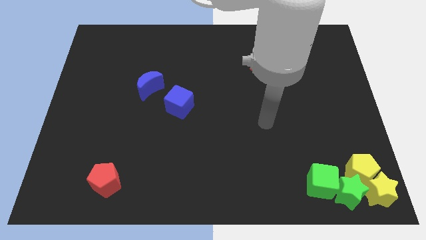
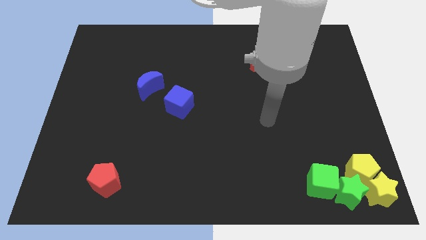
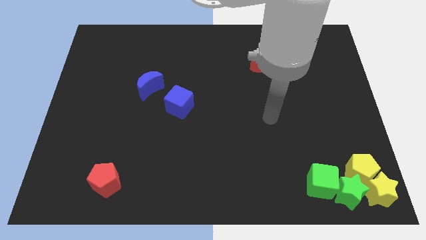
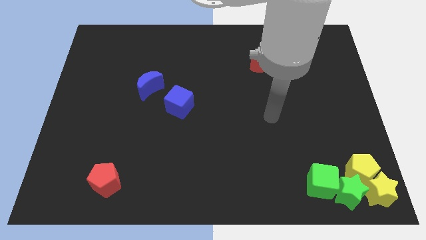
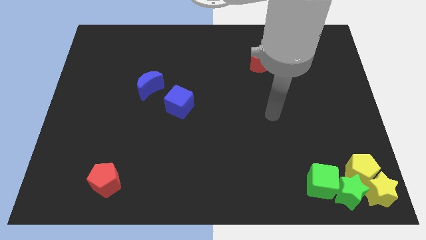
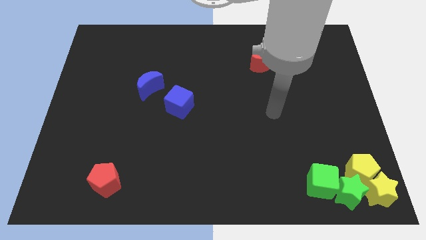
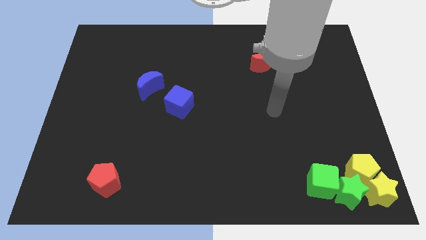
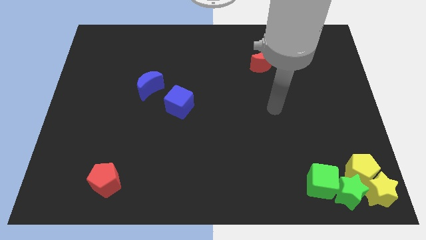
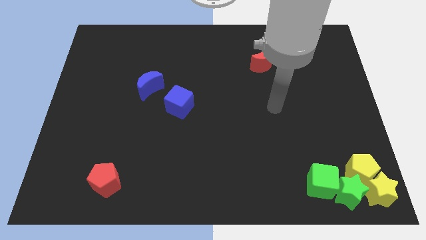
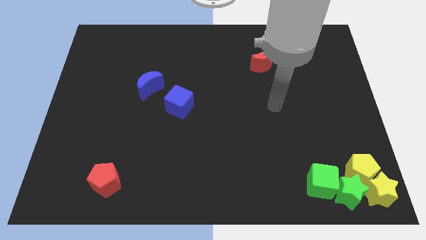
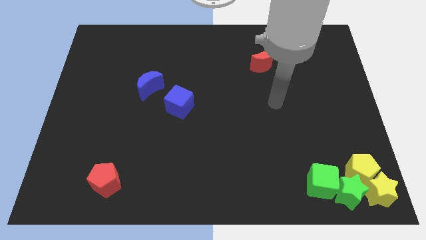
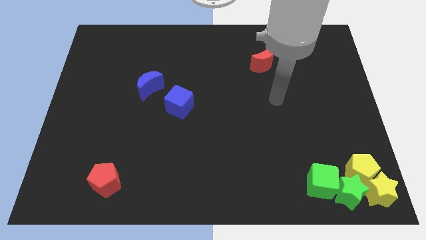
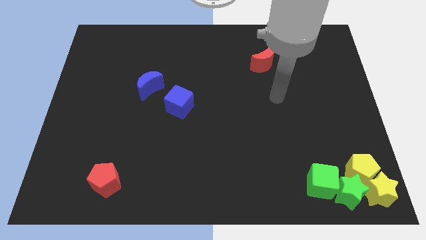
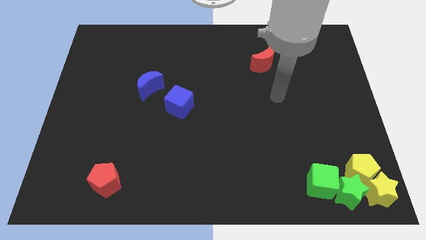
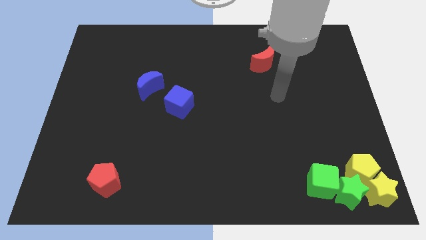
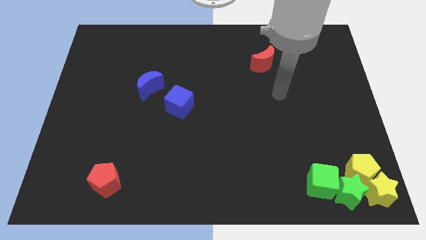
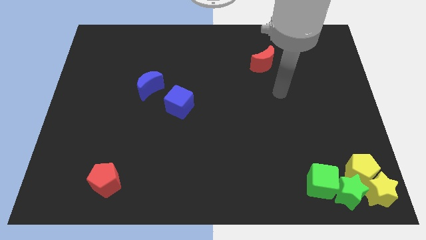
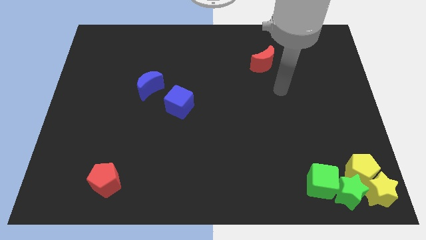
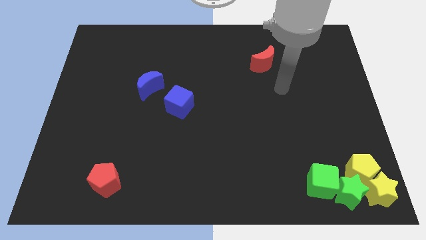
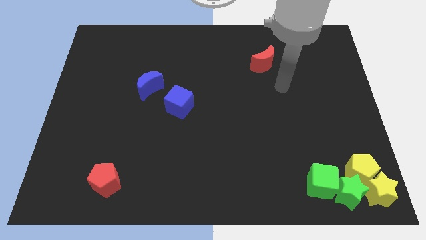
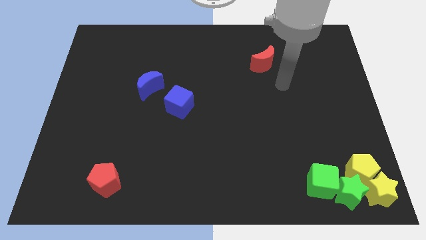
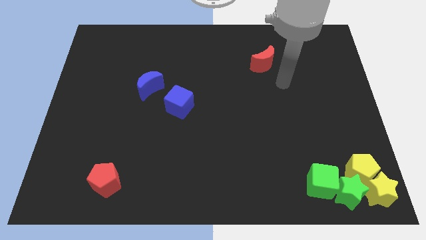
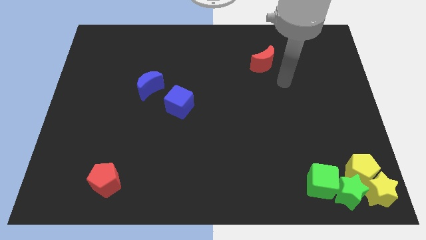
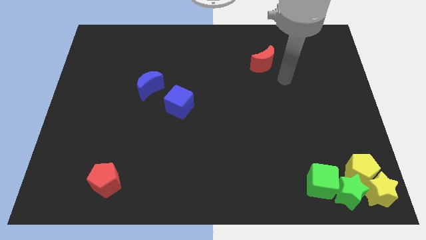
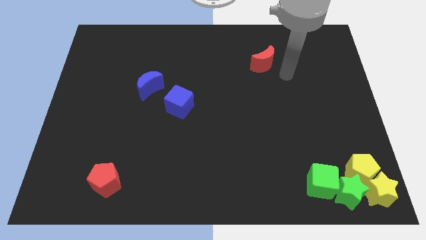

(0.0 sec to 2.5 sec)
move your arm to the red moon

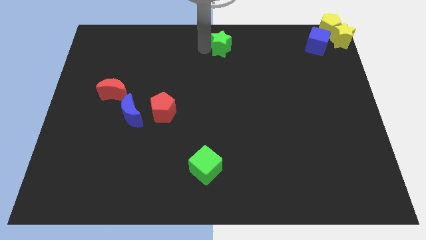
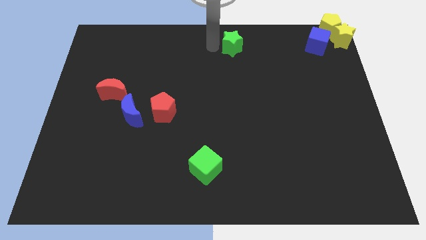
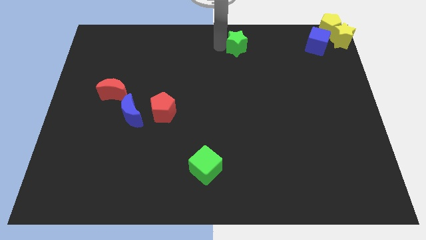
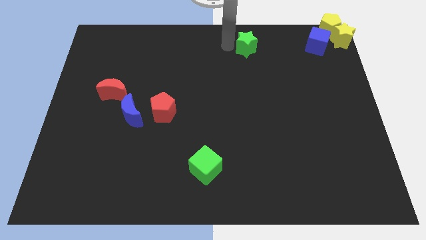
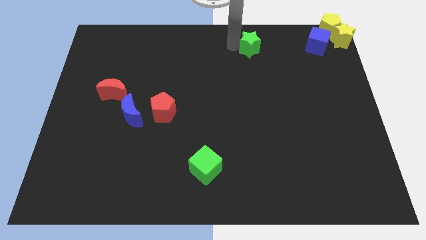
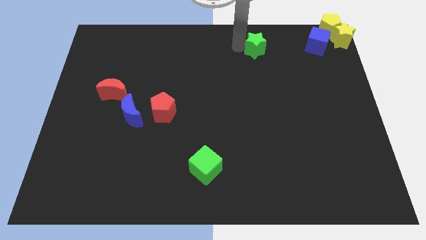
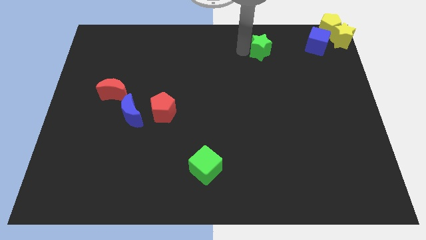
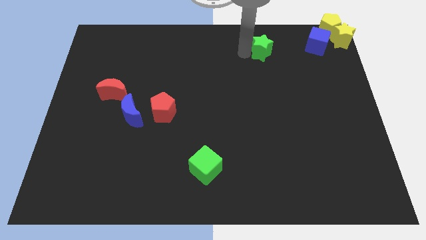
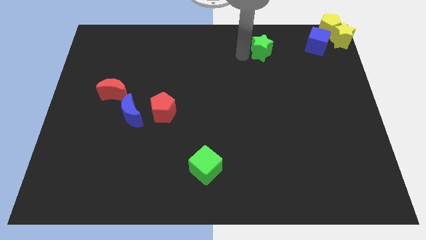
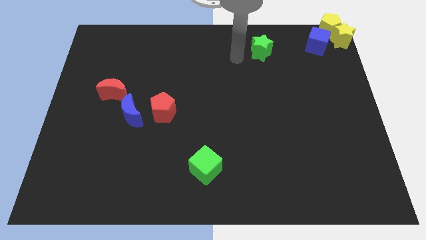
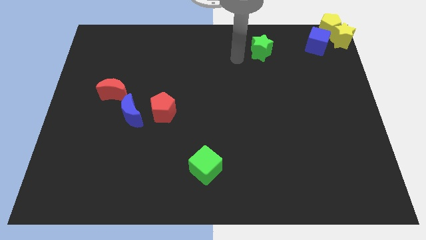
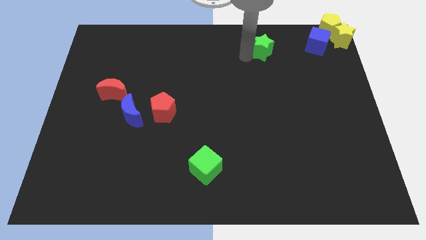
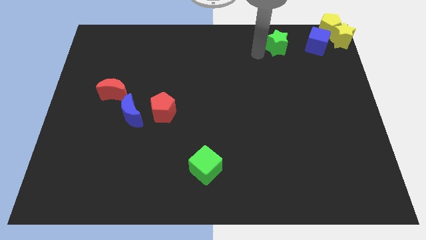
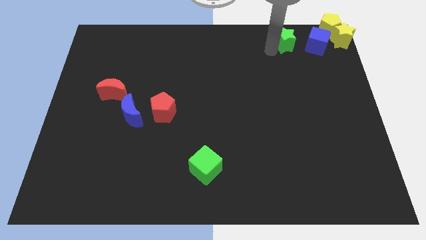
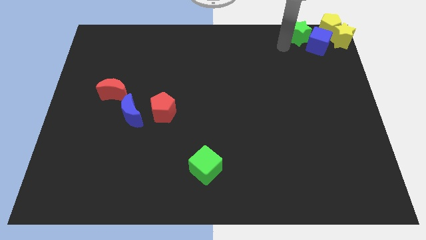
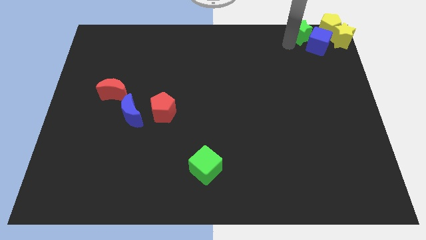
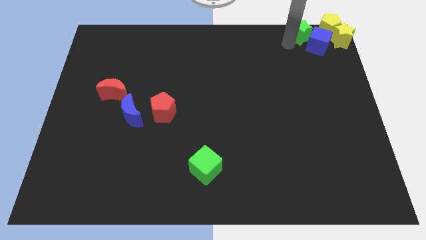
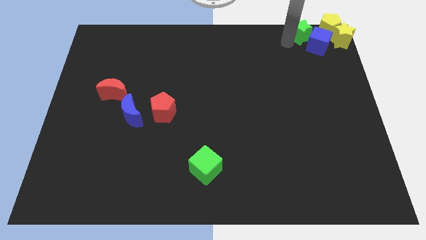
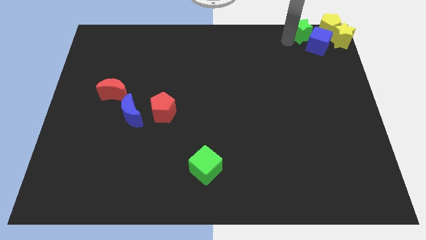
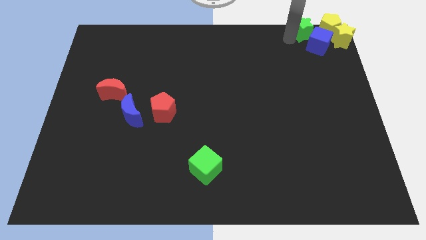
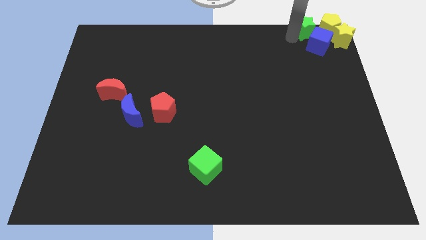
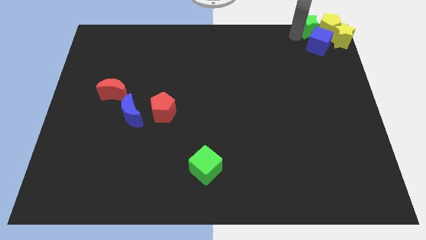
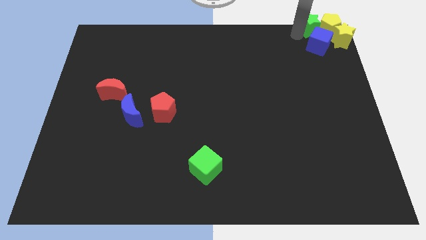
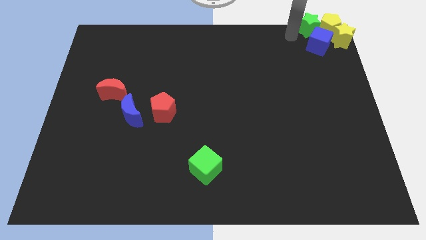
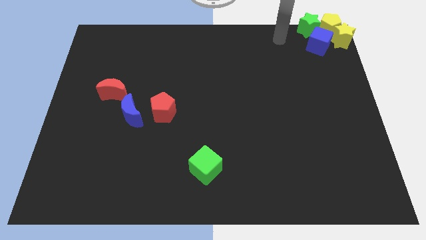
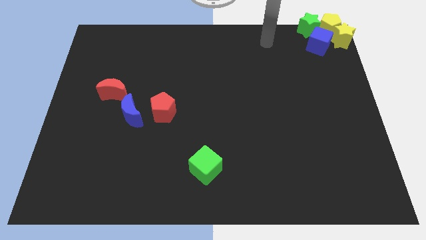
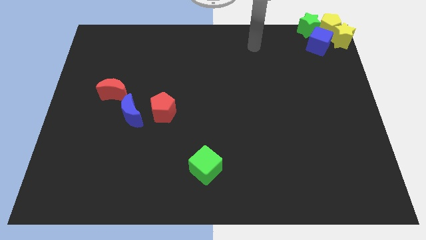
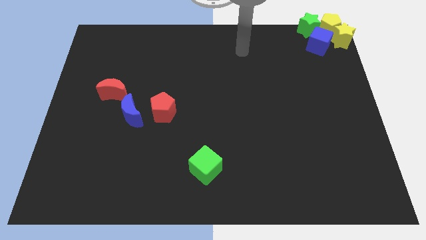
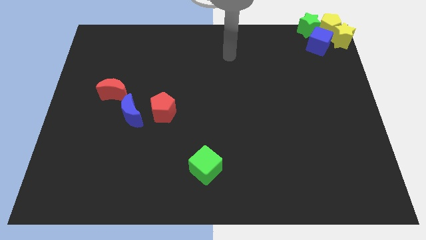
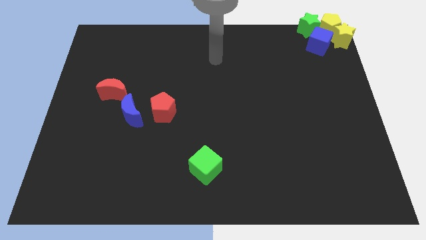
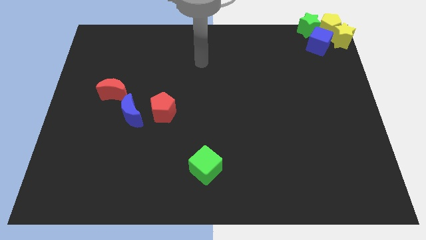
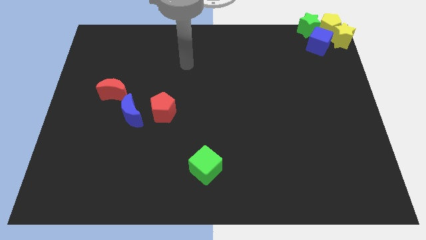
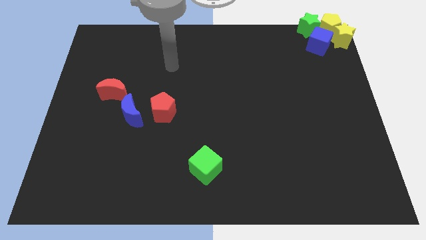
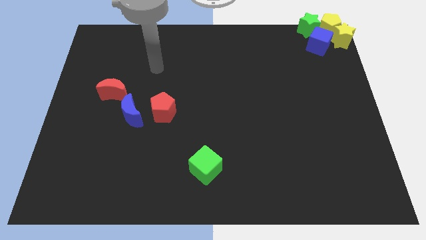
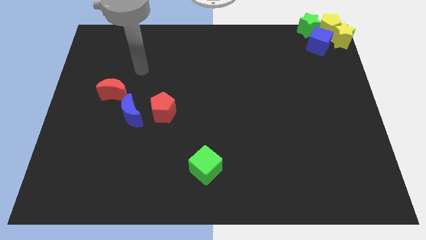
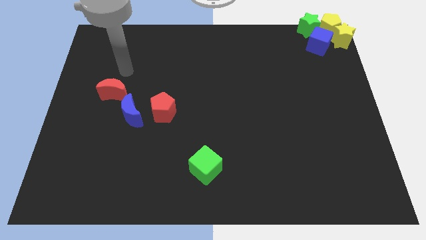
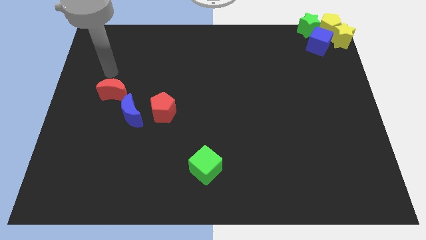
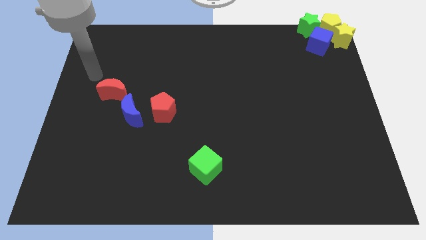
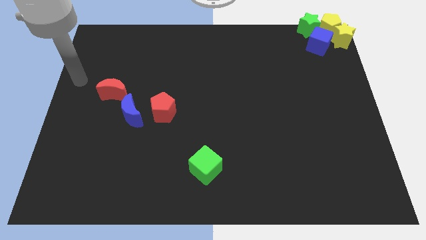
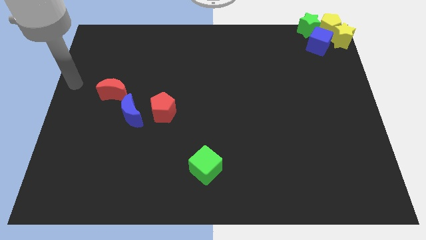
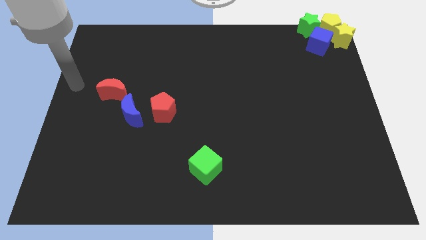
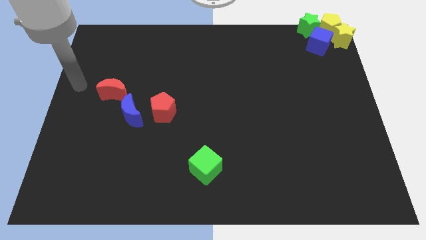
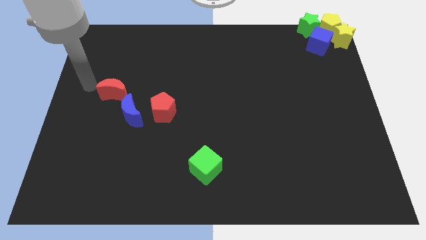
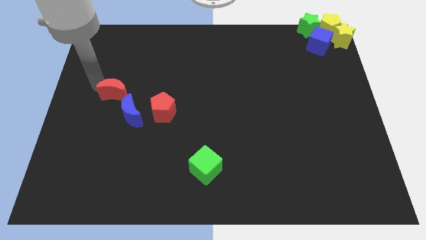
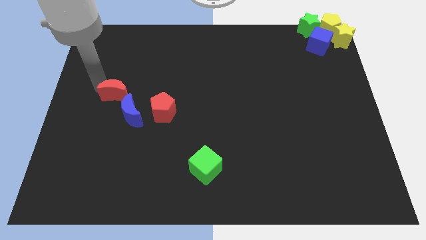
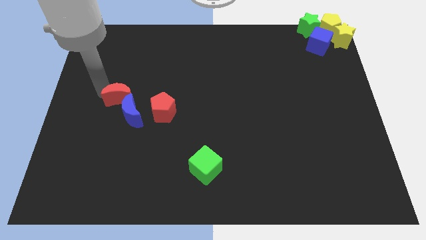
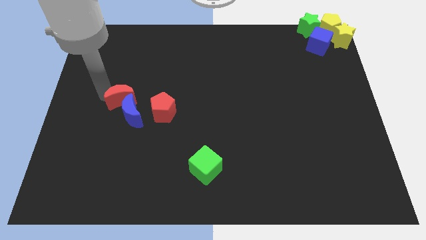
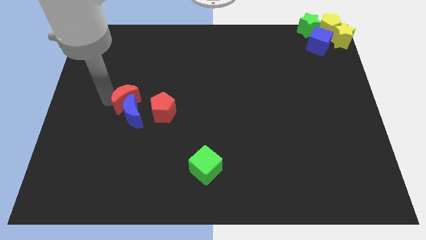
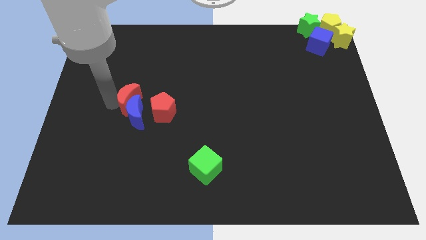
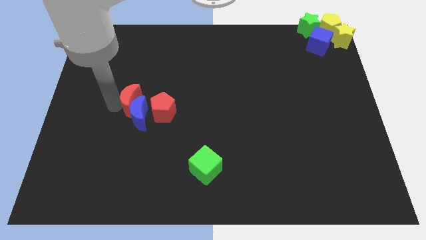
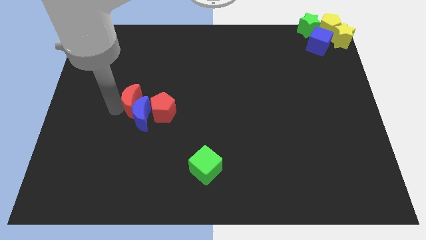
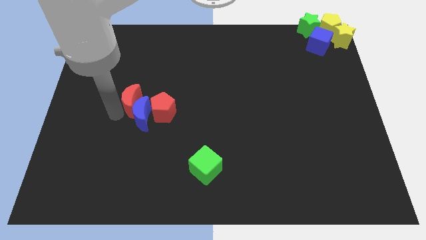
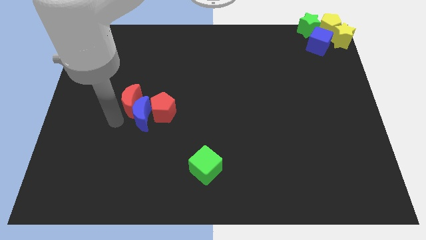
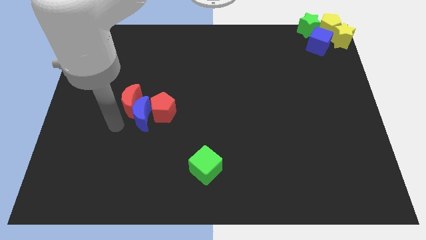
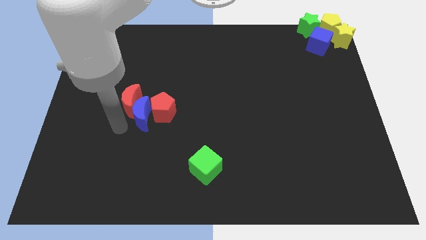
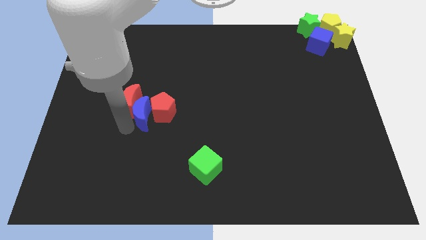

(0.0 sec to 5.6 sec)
push the red moon into the blue moon

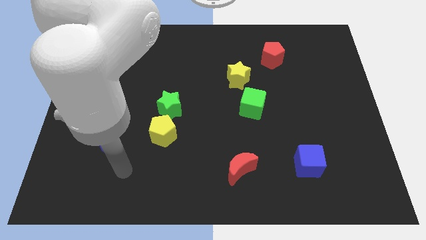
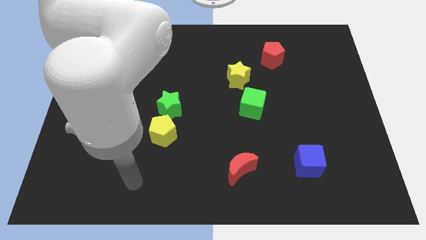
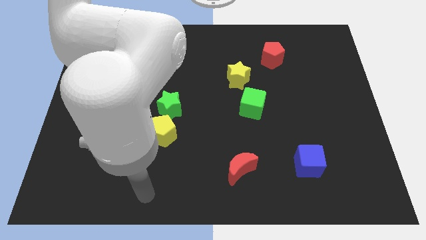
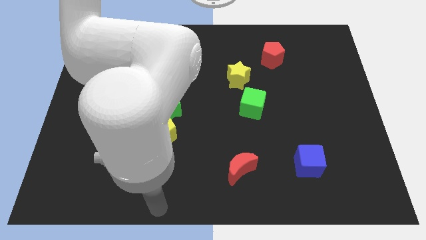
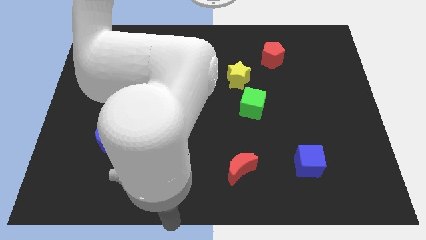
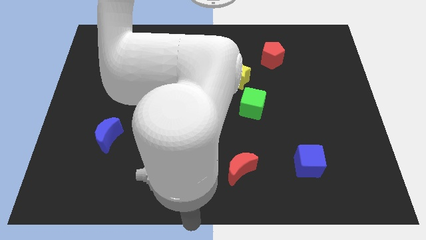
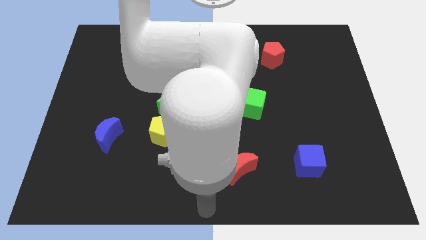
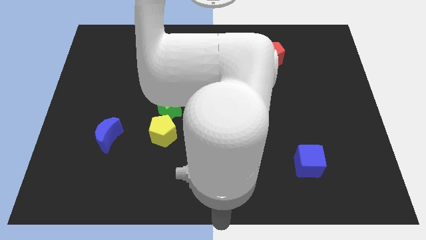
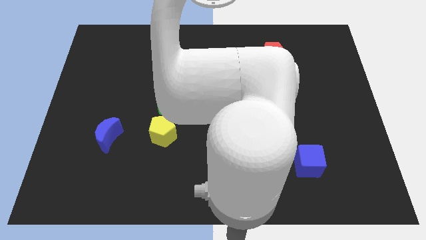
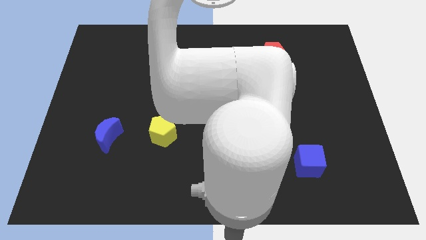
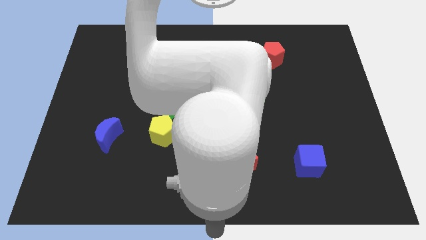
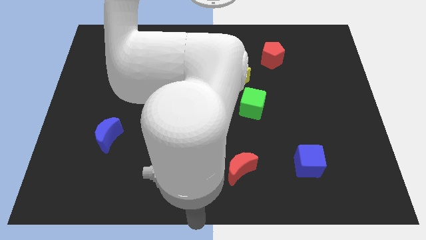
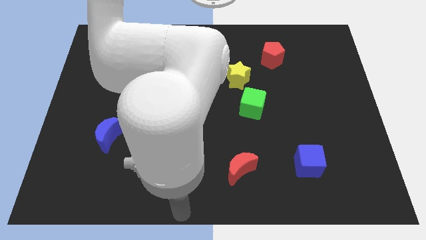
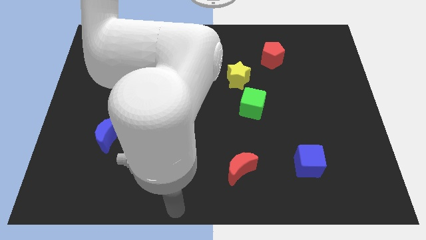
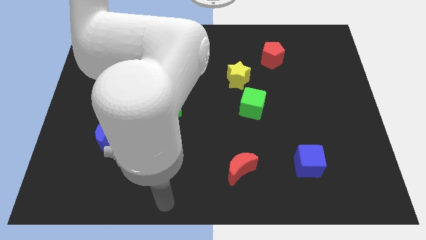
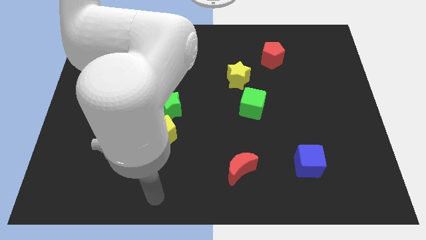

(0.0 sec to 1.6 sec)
point the arm below the yellow pentagon
